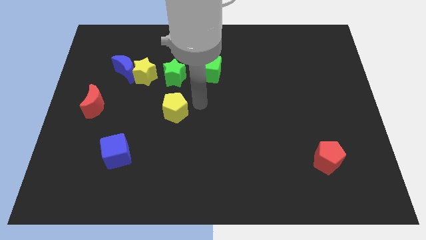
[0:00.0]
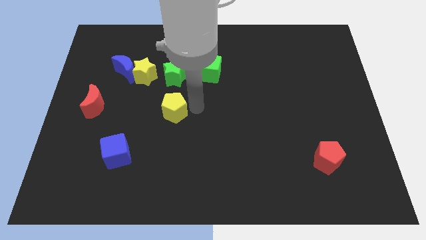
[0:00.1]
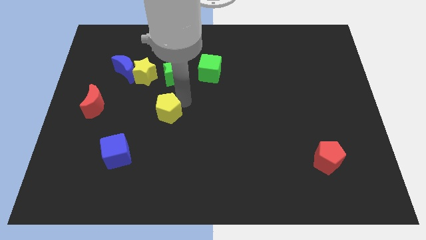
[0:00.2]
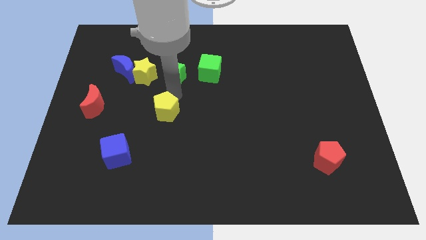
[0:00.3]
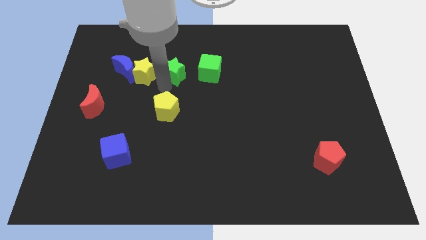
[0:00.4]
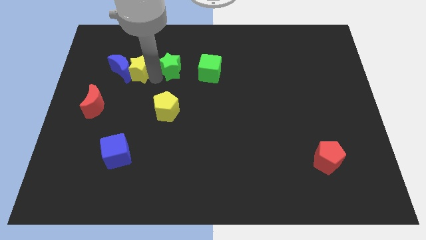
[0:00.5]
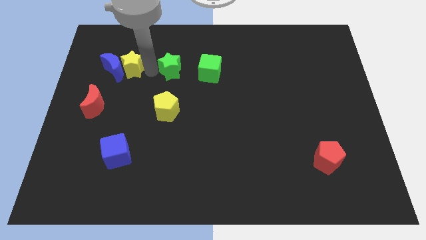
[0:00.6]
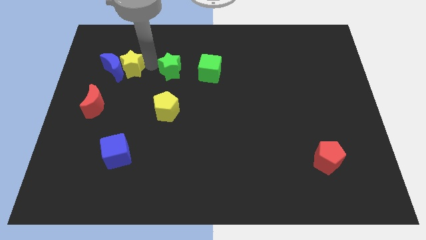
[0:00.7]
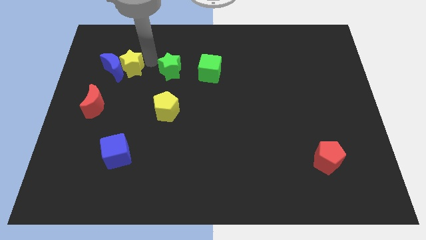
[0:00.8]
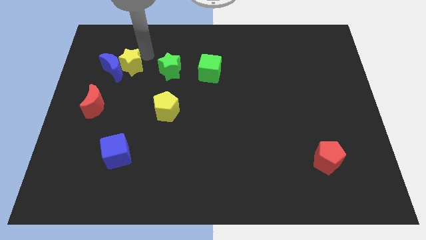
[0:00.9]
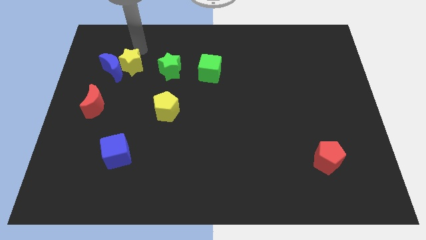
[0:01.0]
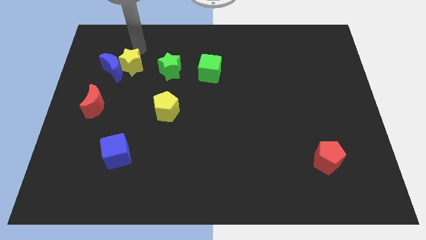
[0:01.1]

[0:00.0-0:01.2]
separate yellow star and green star

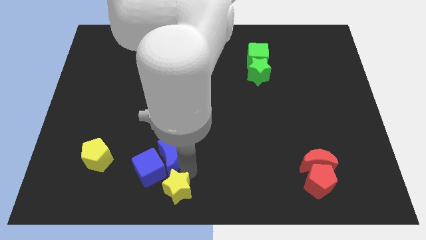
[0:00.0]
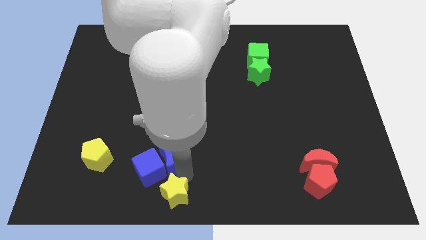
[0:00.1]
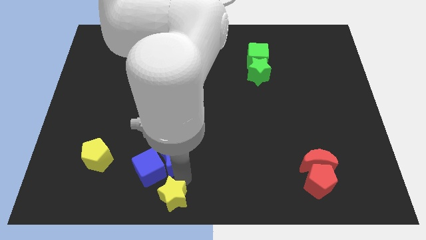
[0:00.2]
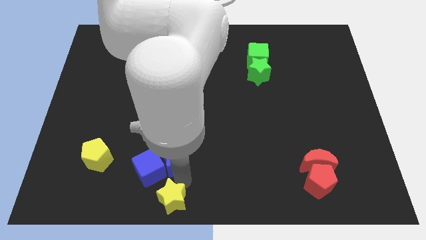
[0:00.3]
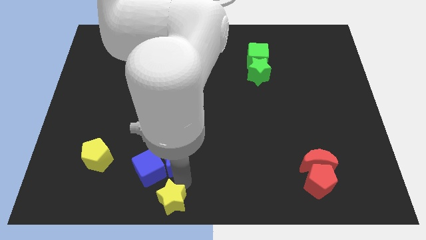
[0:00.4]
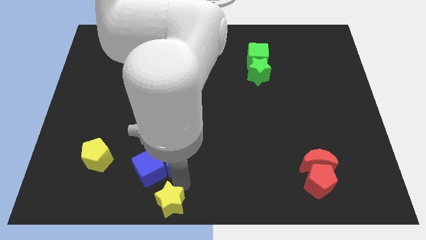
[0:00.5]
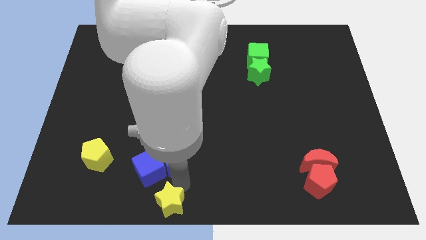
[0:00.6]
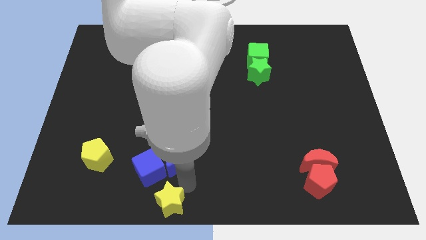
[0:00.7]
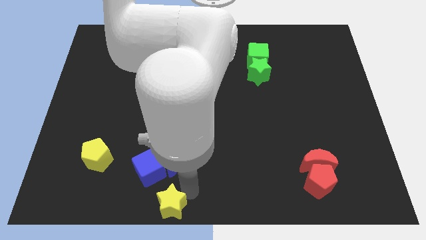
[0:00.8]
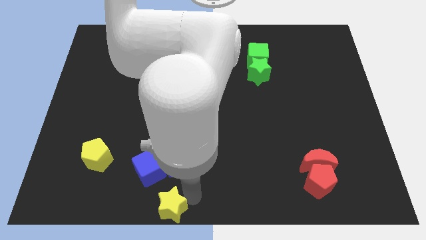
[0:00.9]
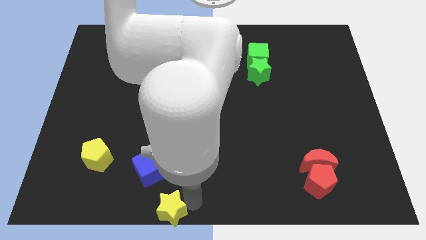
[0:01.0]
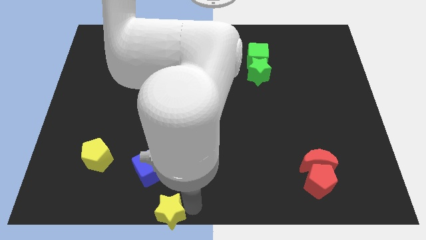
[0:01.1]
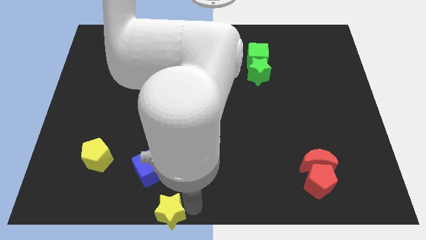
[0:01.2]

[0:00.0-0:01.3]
move the yellow star to the bottom center

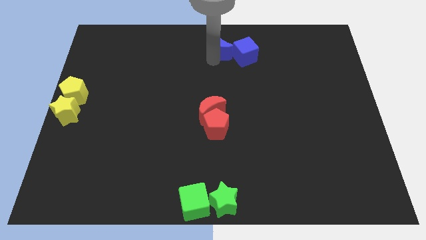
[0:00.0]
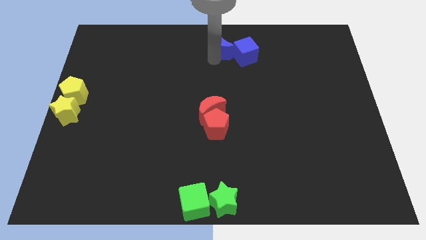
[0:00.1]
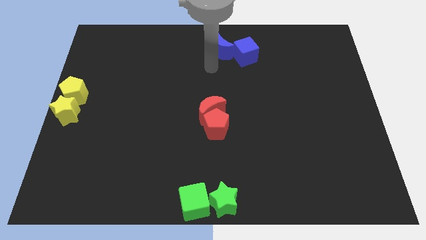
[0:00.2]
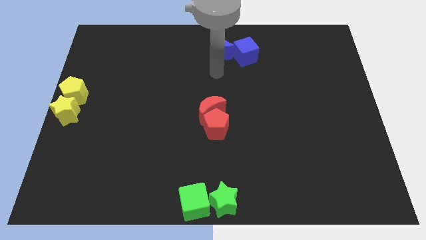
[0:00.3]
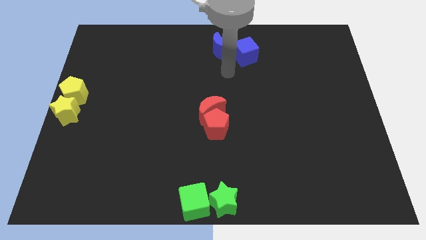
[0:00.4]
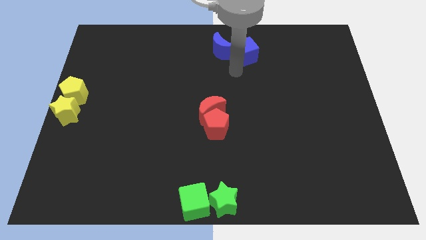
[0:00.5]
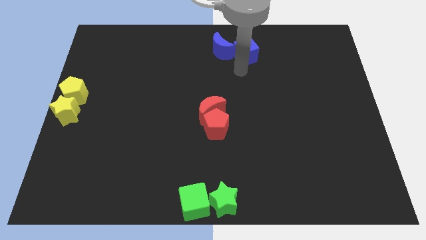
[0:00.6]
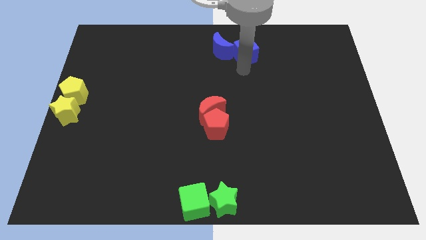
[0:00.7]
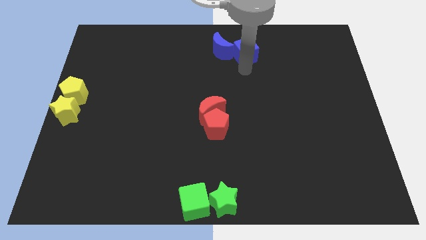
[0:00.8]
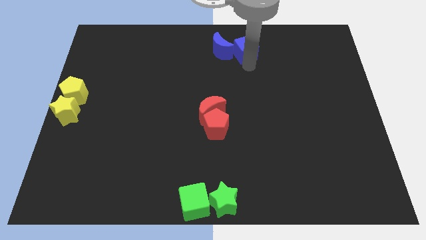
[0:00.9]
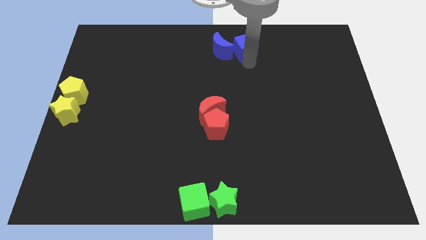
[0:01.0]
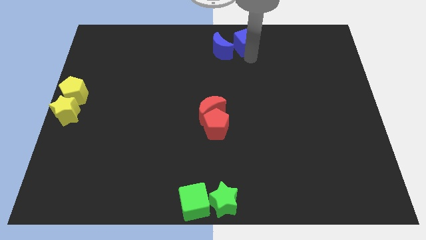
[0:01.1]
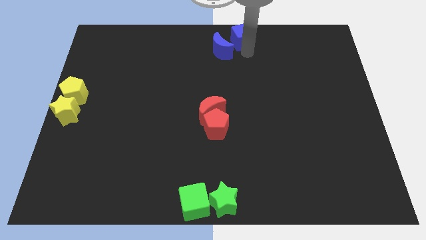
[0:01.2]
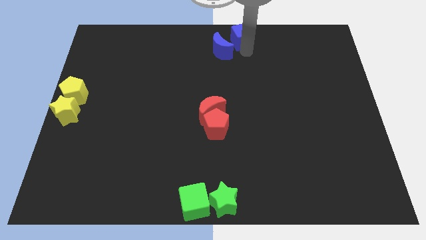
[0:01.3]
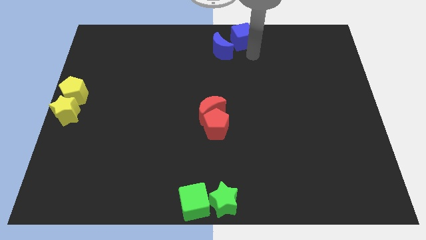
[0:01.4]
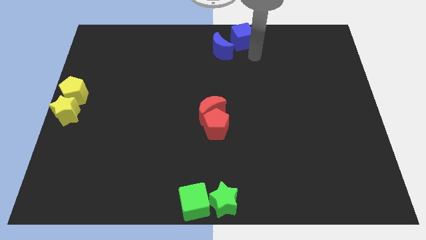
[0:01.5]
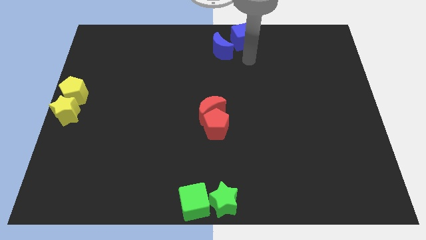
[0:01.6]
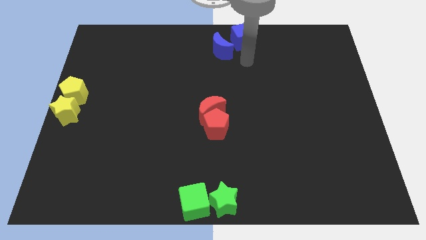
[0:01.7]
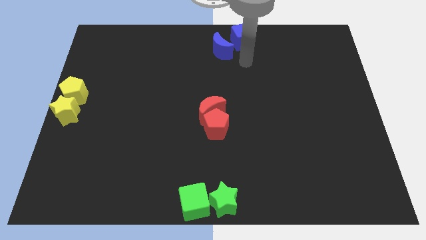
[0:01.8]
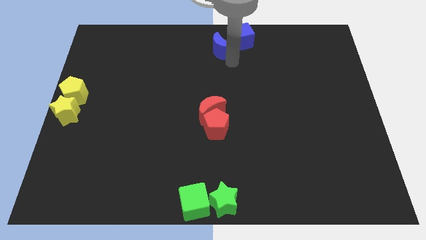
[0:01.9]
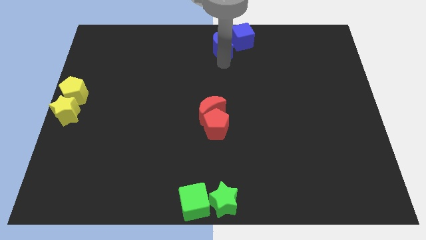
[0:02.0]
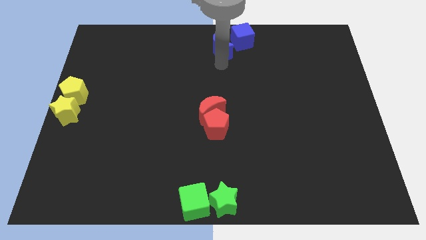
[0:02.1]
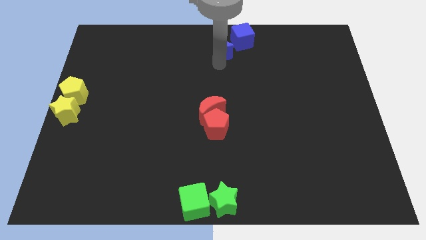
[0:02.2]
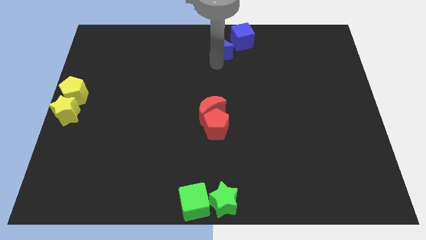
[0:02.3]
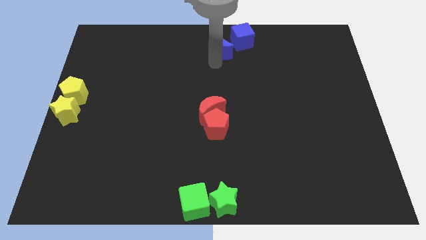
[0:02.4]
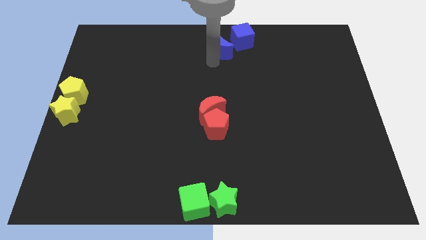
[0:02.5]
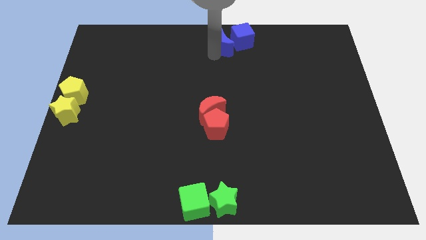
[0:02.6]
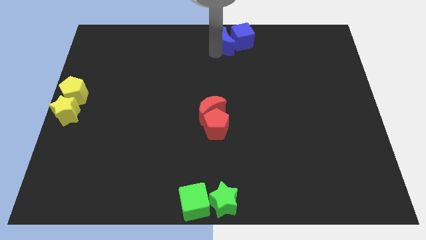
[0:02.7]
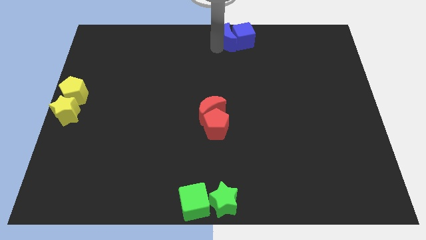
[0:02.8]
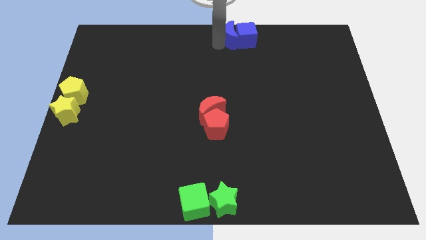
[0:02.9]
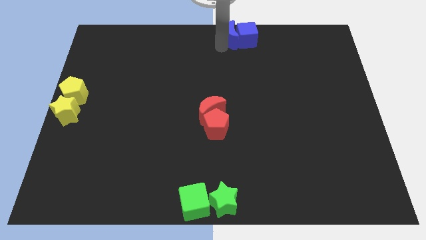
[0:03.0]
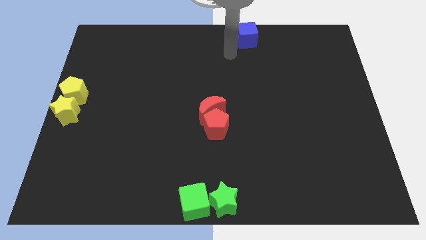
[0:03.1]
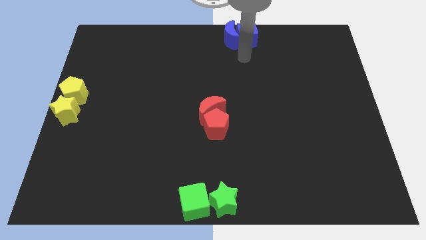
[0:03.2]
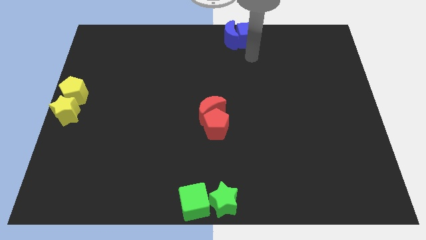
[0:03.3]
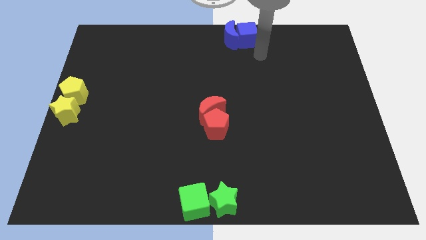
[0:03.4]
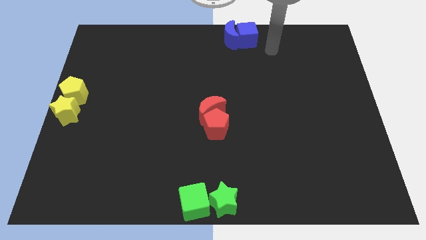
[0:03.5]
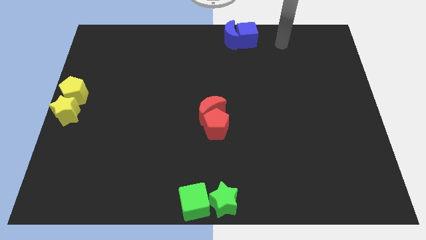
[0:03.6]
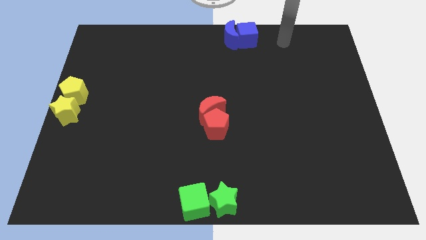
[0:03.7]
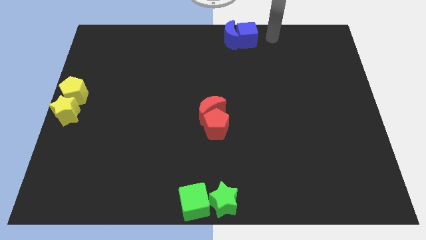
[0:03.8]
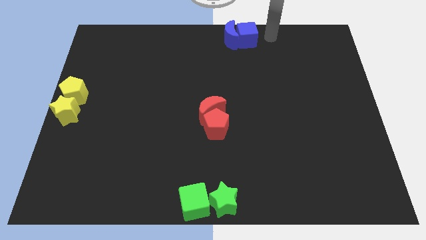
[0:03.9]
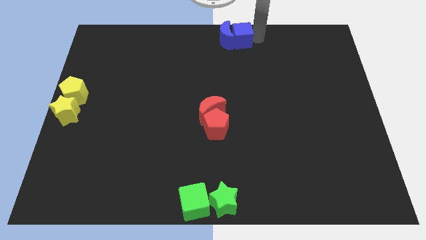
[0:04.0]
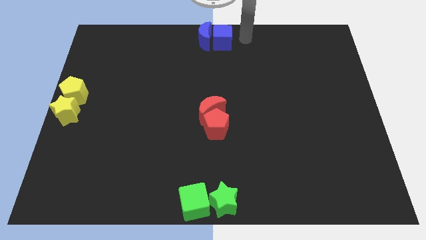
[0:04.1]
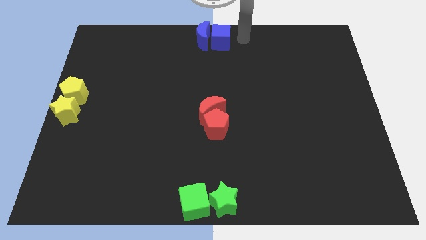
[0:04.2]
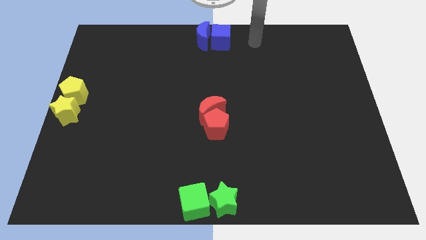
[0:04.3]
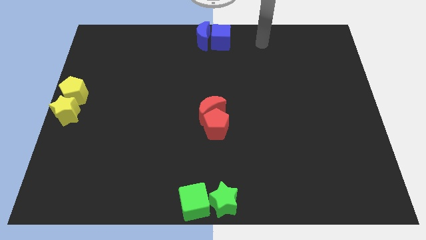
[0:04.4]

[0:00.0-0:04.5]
slide the blue cube and blue crescent to the top center

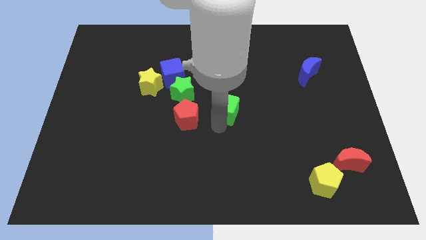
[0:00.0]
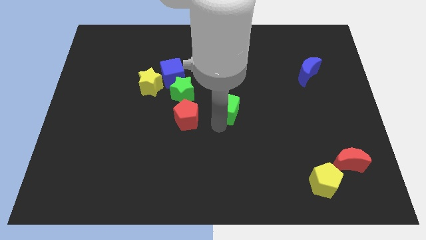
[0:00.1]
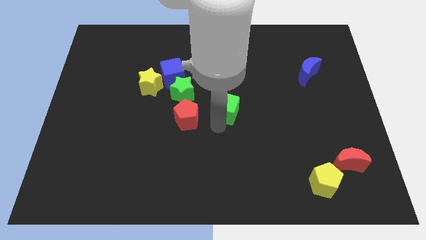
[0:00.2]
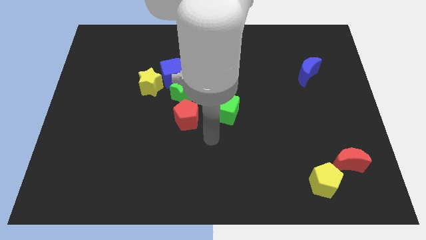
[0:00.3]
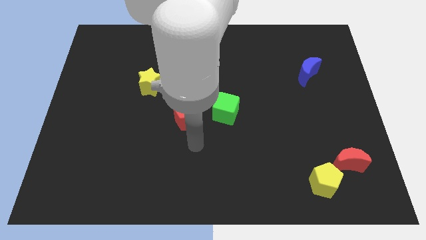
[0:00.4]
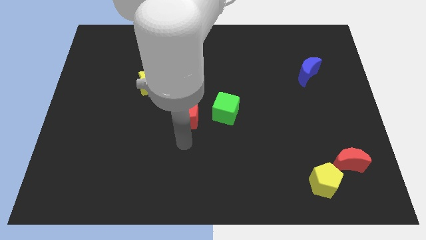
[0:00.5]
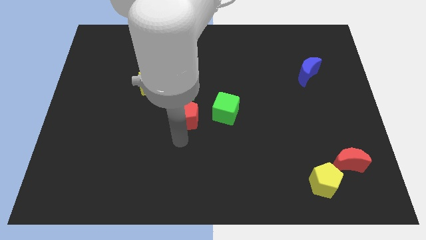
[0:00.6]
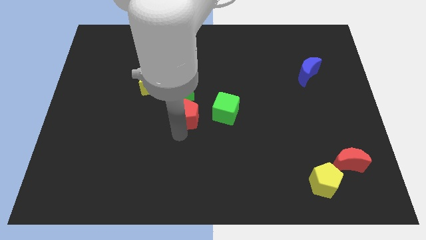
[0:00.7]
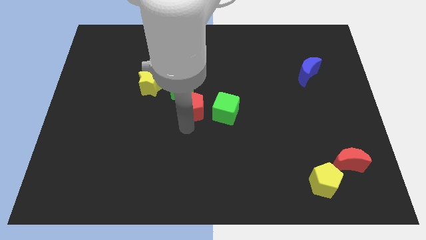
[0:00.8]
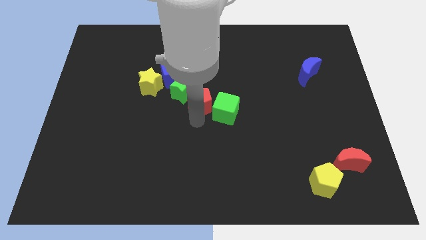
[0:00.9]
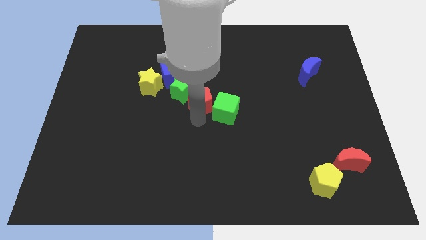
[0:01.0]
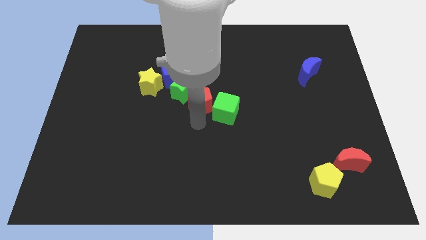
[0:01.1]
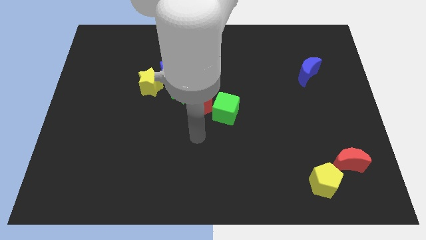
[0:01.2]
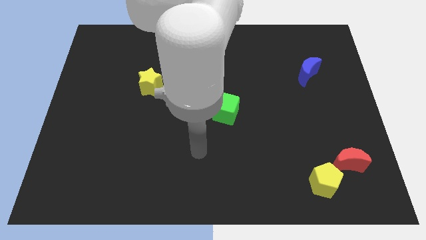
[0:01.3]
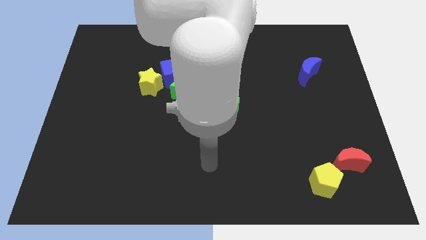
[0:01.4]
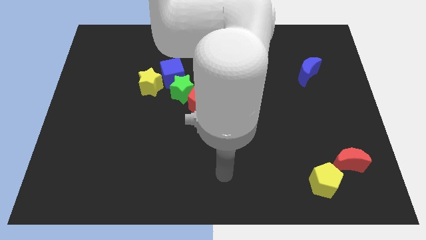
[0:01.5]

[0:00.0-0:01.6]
put the red pentagon between the green blocks

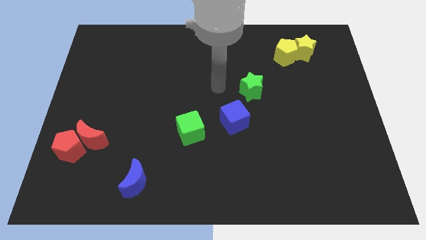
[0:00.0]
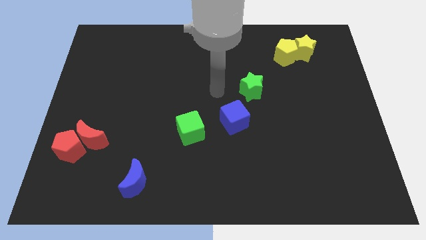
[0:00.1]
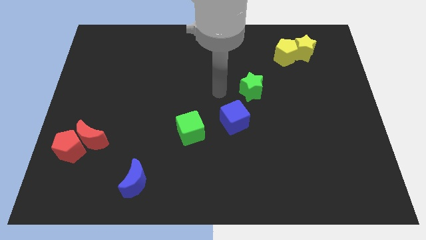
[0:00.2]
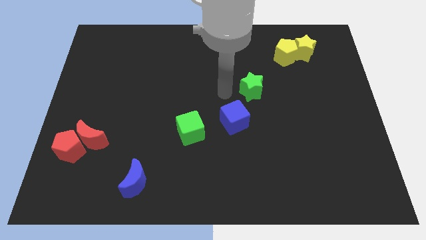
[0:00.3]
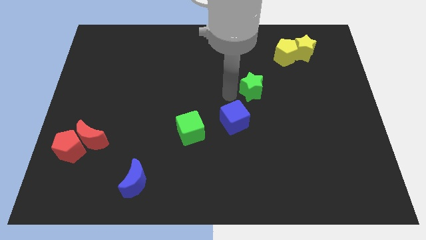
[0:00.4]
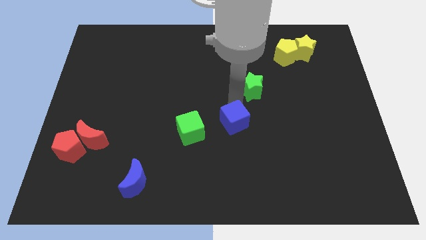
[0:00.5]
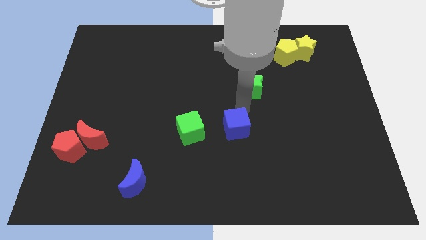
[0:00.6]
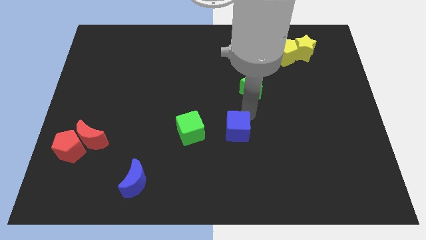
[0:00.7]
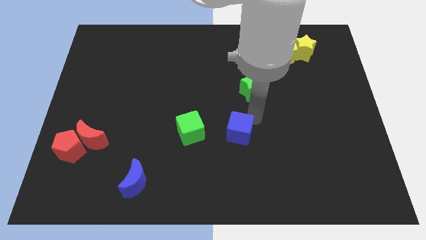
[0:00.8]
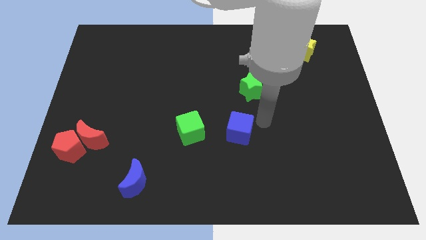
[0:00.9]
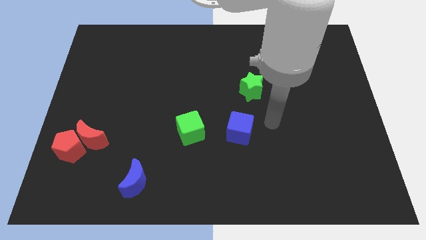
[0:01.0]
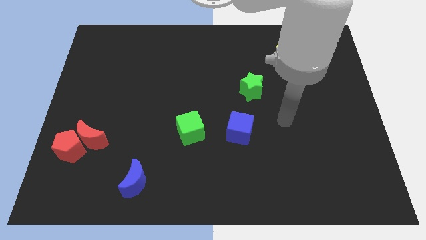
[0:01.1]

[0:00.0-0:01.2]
slightly move the blue cube to the bottom of the board
